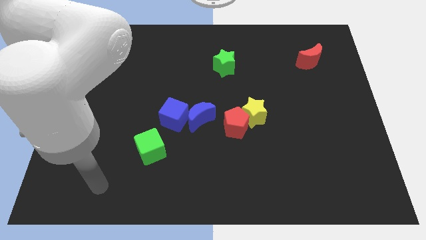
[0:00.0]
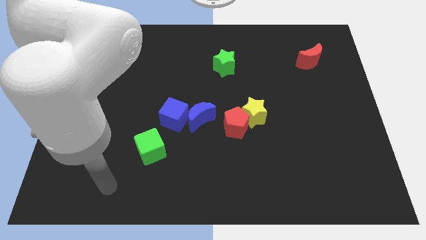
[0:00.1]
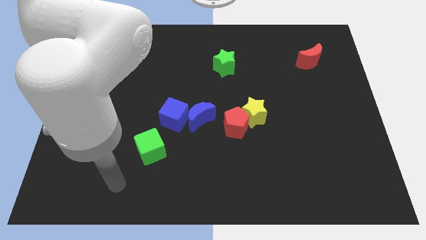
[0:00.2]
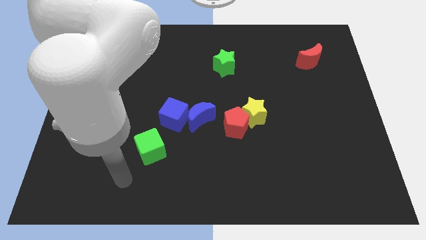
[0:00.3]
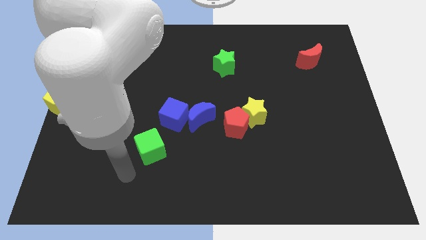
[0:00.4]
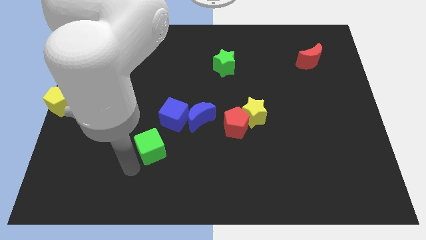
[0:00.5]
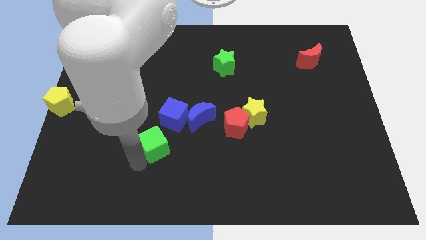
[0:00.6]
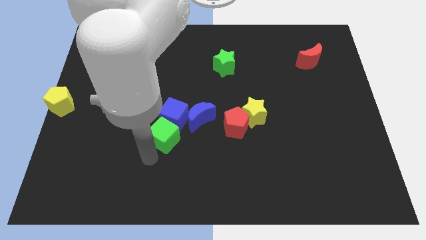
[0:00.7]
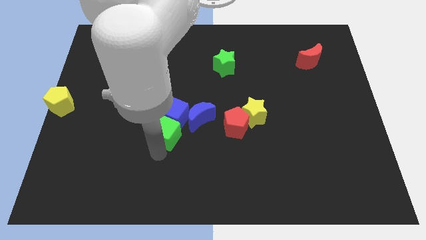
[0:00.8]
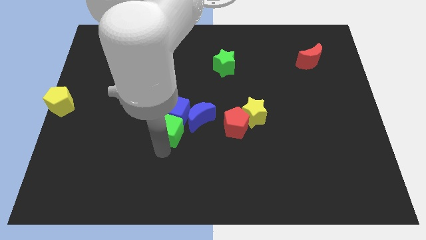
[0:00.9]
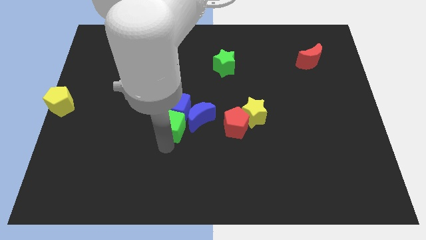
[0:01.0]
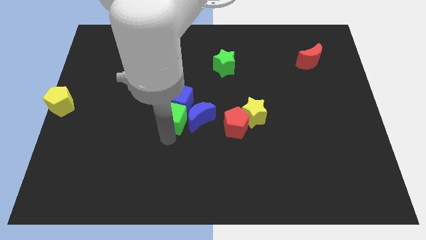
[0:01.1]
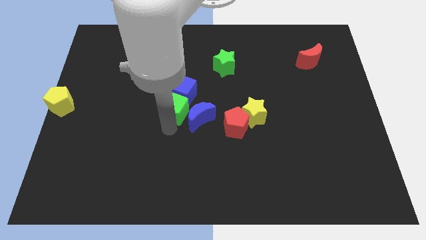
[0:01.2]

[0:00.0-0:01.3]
move the green cube into the blue cube

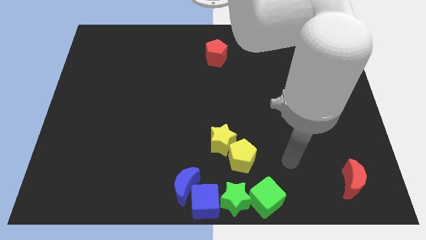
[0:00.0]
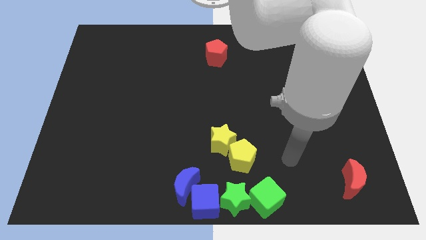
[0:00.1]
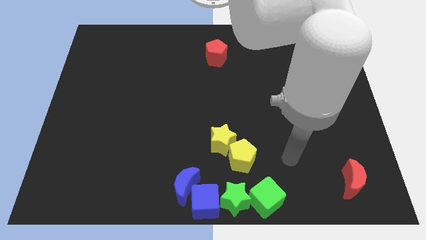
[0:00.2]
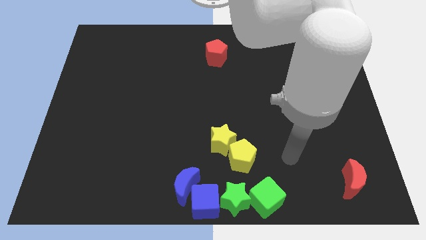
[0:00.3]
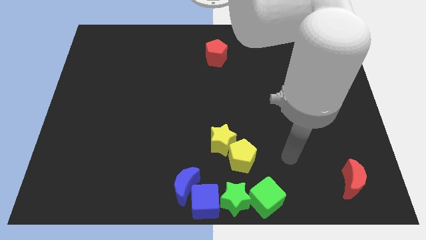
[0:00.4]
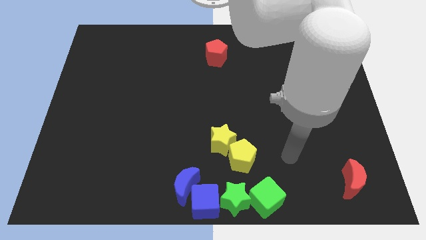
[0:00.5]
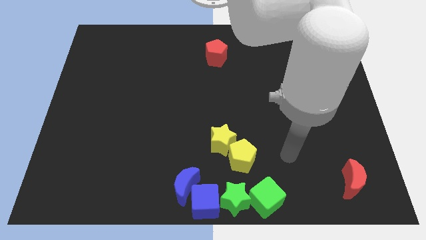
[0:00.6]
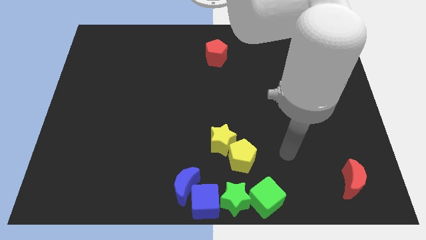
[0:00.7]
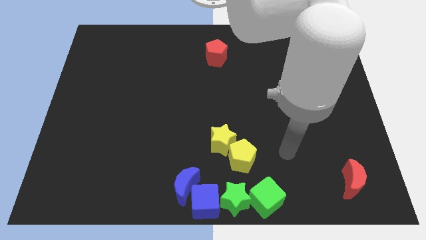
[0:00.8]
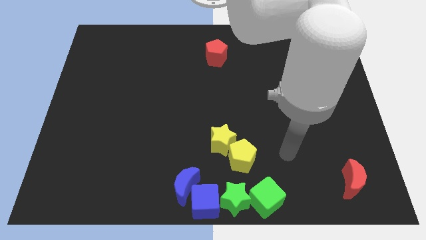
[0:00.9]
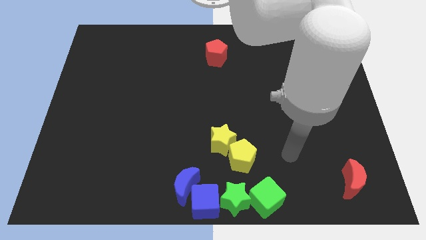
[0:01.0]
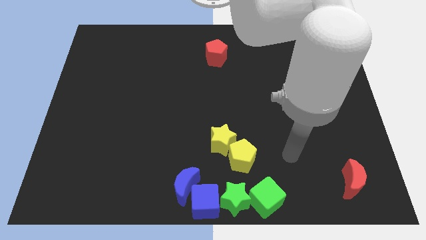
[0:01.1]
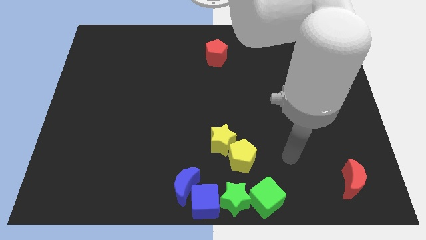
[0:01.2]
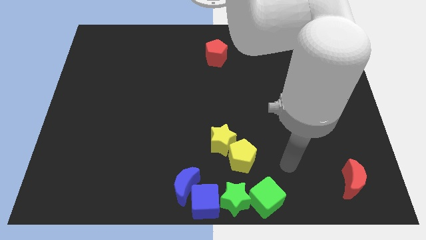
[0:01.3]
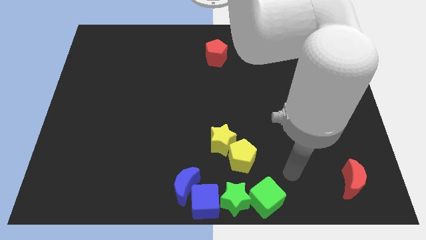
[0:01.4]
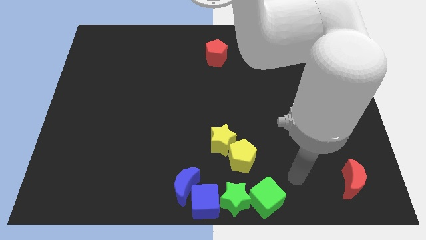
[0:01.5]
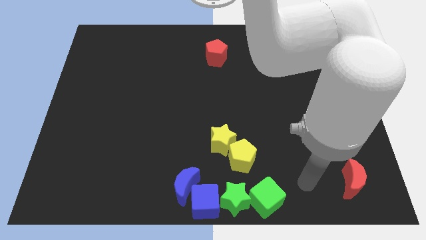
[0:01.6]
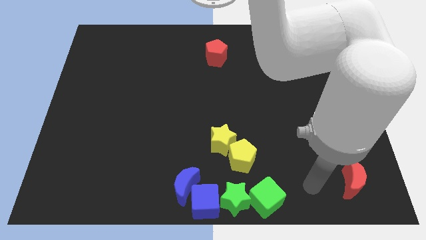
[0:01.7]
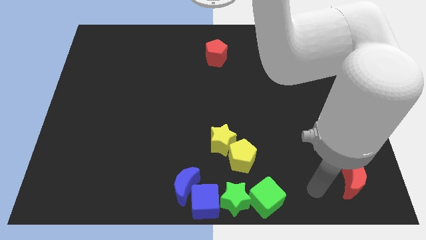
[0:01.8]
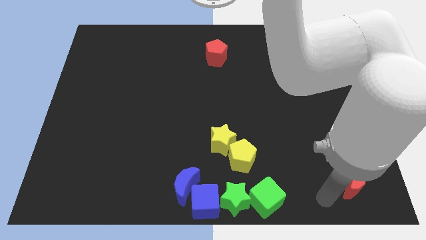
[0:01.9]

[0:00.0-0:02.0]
move your arm close to the red moon

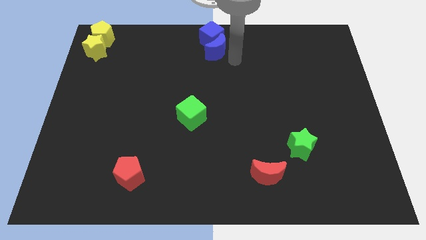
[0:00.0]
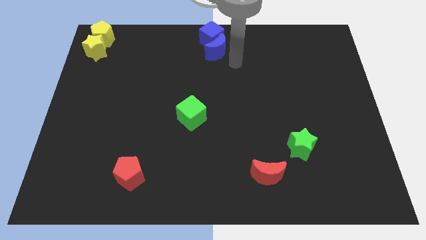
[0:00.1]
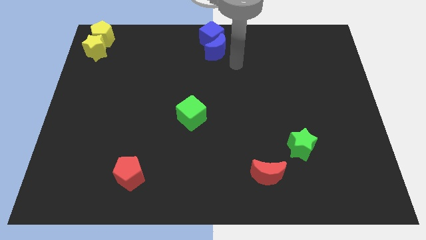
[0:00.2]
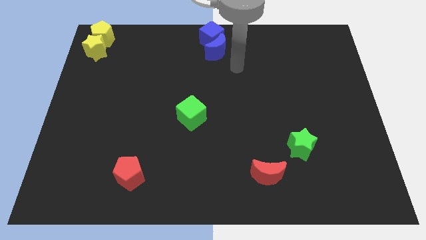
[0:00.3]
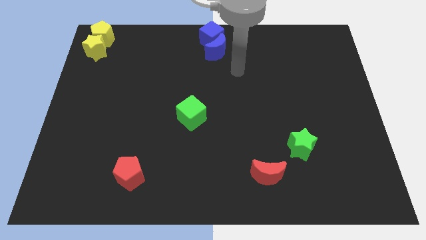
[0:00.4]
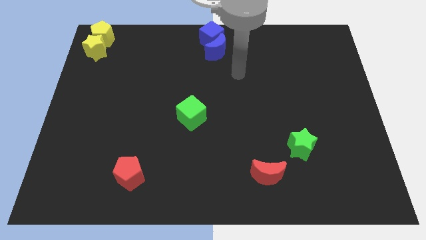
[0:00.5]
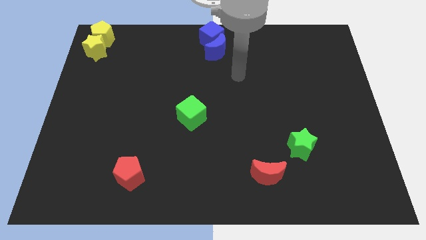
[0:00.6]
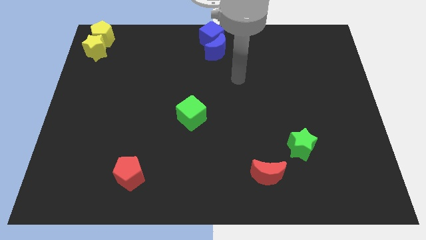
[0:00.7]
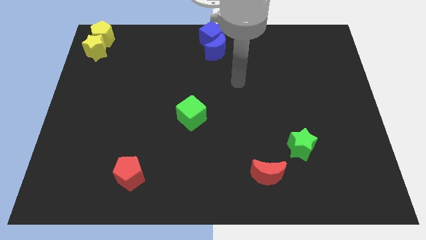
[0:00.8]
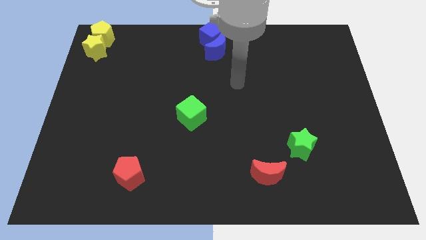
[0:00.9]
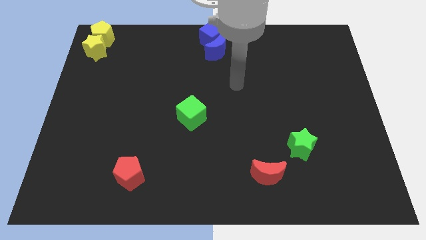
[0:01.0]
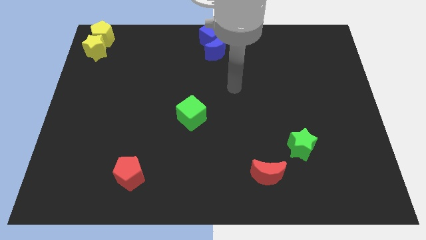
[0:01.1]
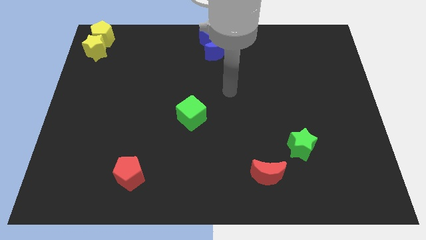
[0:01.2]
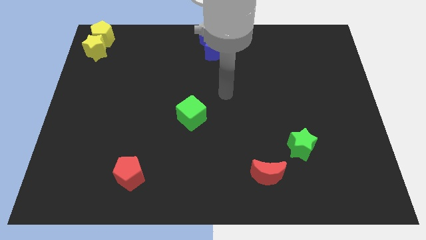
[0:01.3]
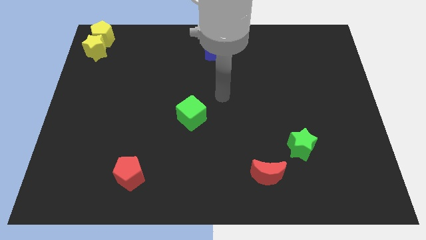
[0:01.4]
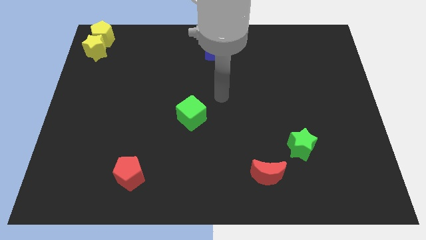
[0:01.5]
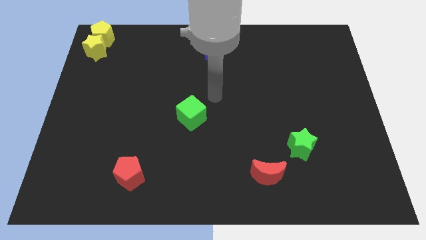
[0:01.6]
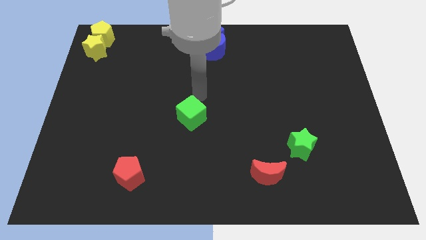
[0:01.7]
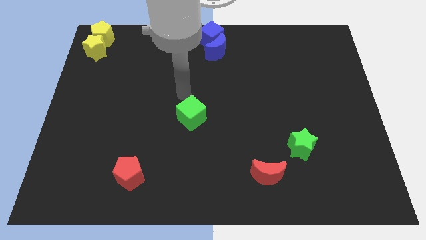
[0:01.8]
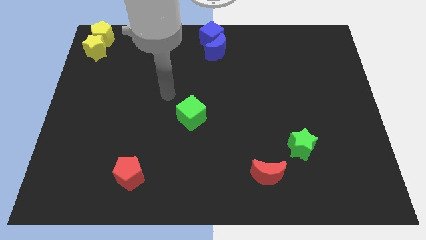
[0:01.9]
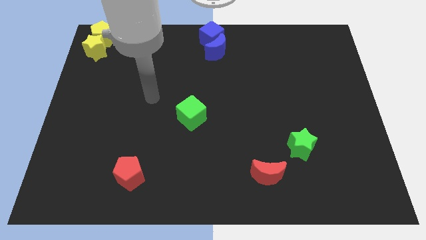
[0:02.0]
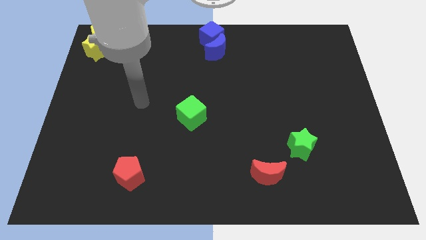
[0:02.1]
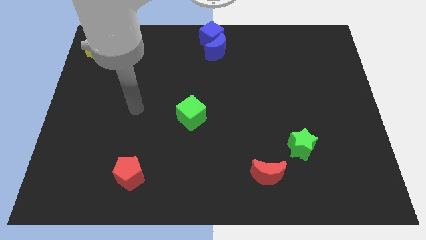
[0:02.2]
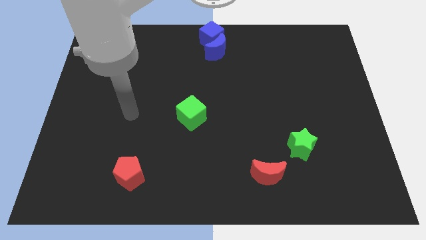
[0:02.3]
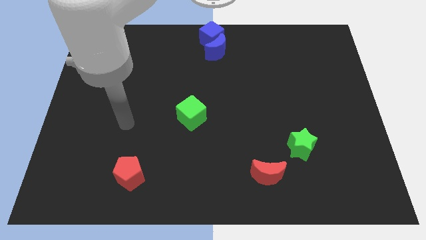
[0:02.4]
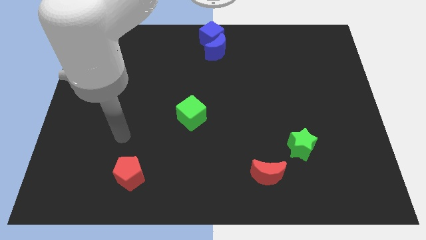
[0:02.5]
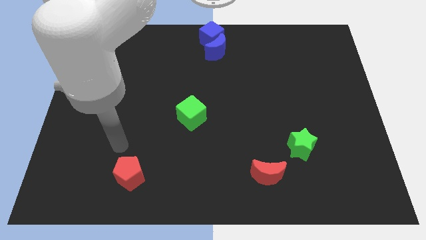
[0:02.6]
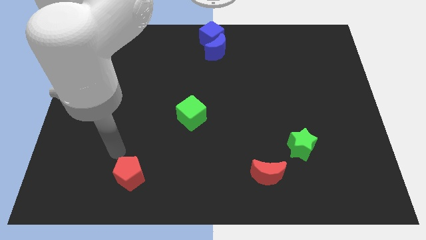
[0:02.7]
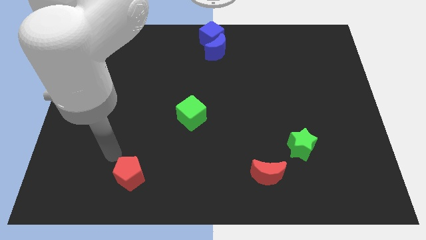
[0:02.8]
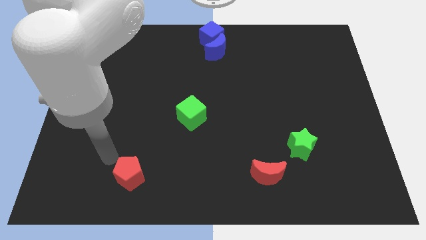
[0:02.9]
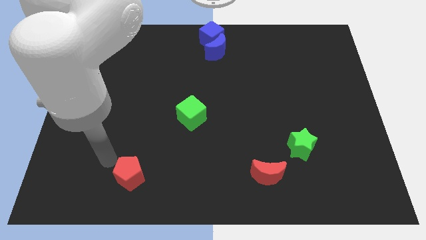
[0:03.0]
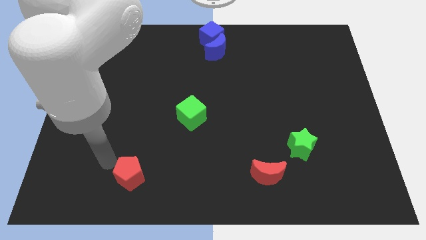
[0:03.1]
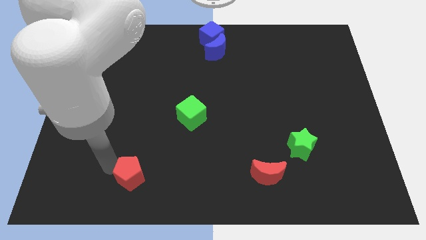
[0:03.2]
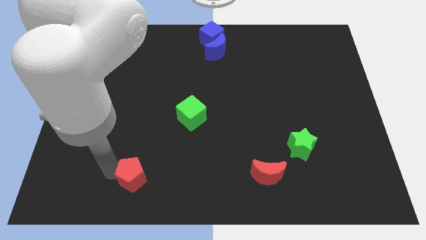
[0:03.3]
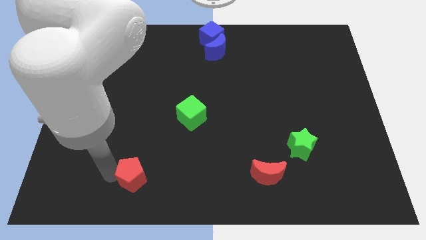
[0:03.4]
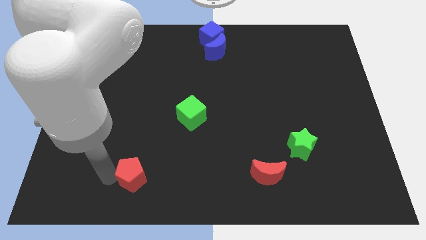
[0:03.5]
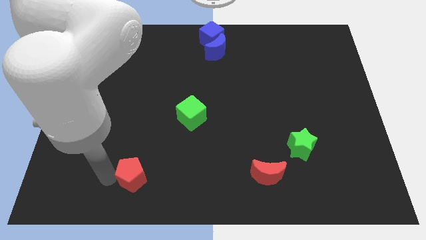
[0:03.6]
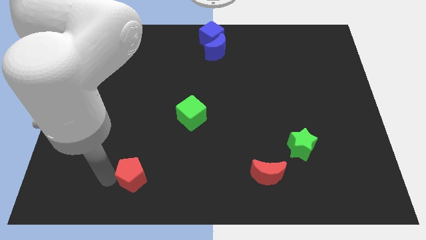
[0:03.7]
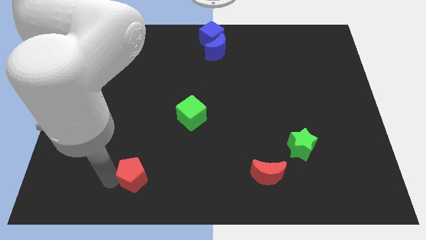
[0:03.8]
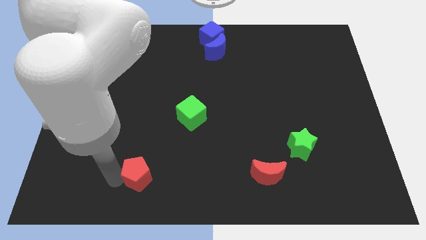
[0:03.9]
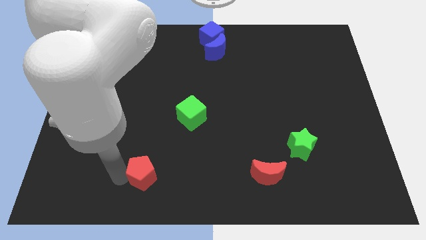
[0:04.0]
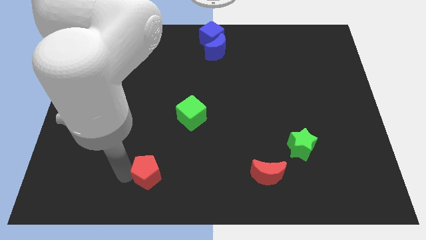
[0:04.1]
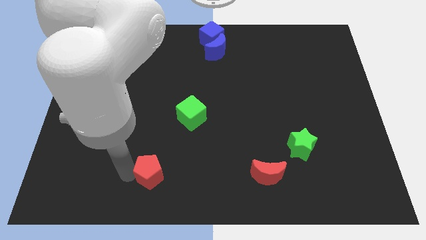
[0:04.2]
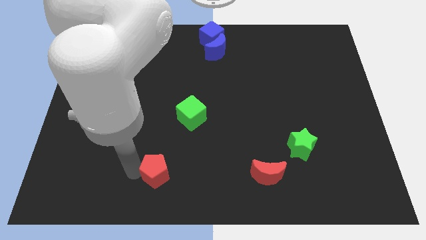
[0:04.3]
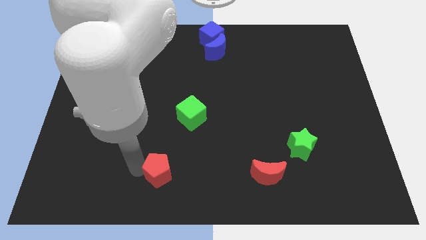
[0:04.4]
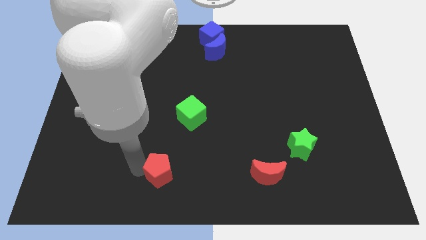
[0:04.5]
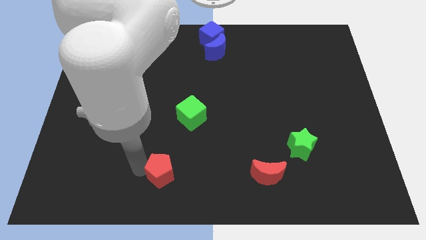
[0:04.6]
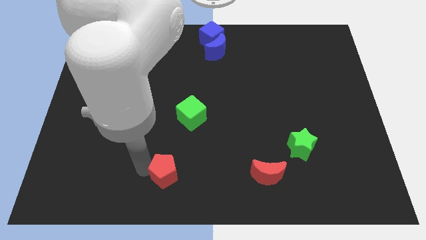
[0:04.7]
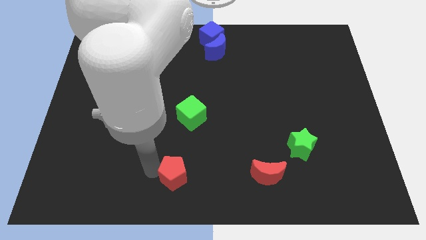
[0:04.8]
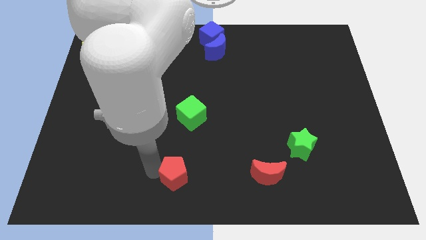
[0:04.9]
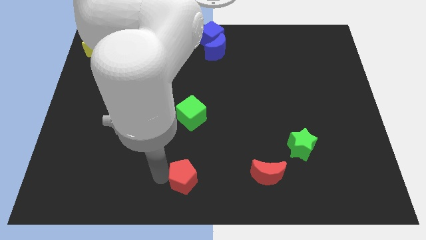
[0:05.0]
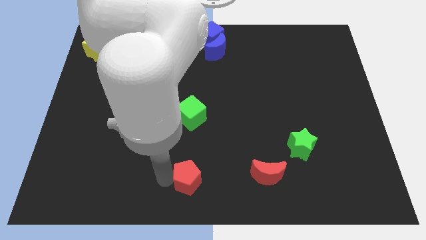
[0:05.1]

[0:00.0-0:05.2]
place the red pentagon below the green cube

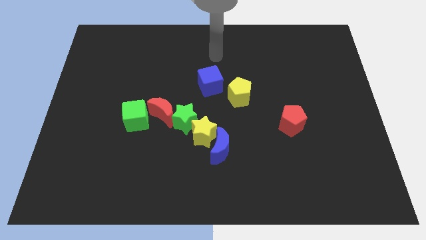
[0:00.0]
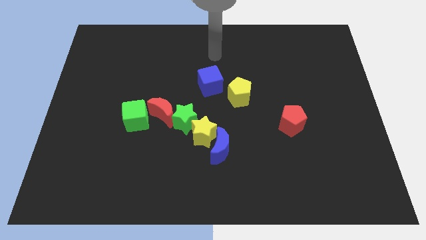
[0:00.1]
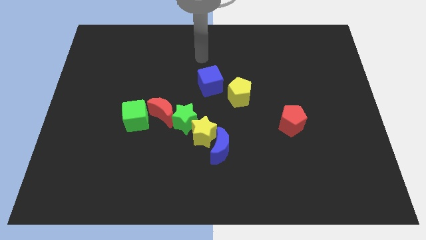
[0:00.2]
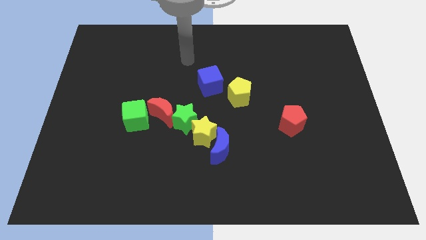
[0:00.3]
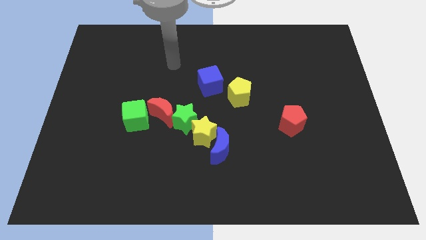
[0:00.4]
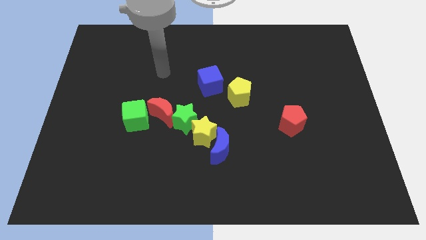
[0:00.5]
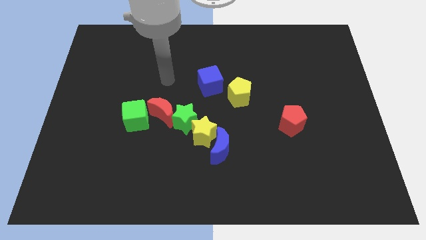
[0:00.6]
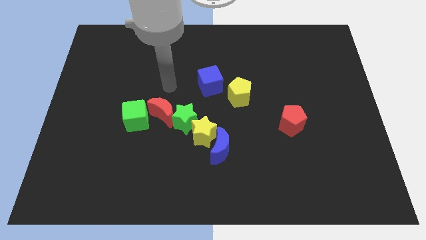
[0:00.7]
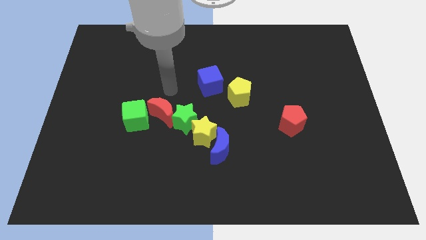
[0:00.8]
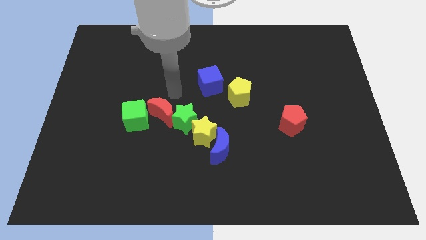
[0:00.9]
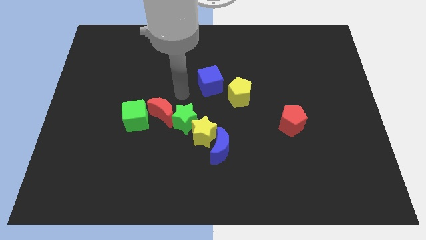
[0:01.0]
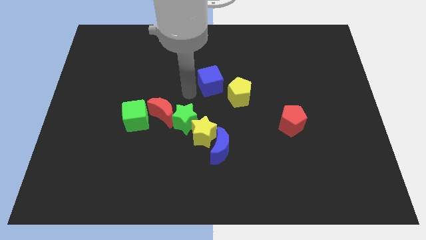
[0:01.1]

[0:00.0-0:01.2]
point the arm to the left of the blue cube
